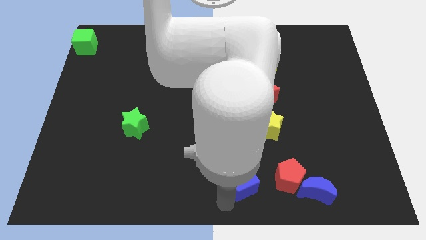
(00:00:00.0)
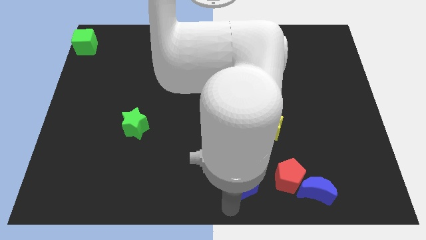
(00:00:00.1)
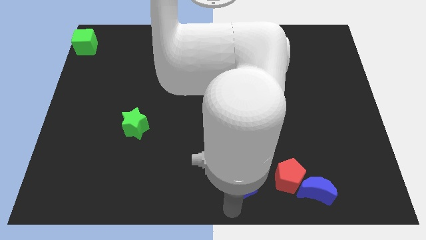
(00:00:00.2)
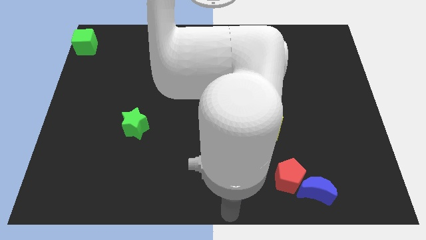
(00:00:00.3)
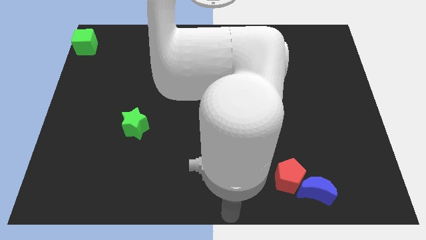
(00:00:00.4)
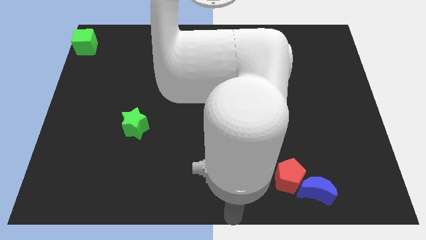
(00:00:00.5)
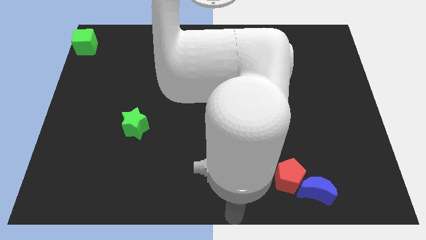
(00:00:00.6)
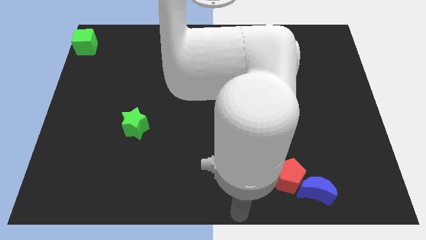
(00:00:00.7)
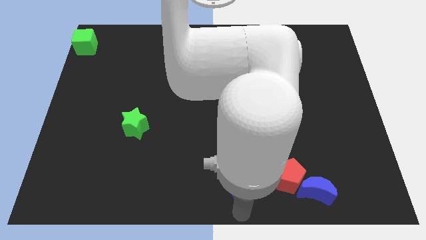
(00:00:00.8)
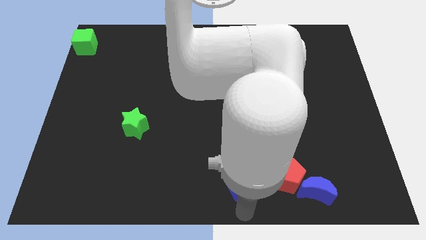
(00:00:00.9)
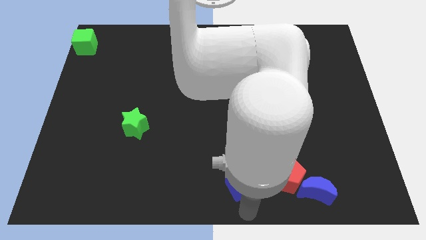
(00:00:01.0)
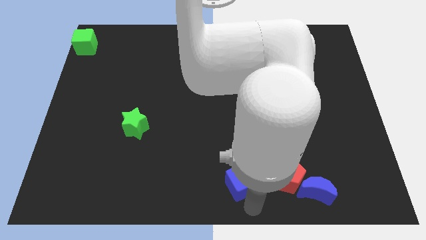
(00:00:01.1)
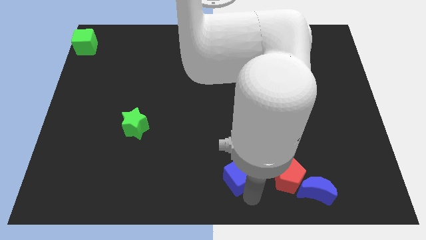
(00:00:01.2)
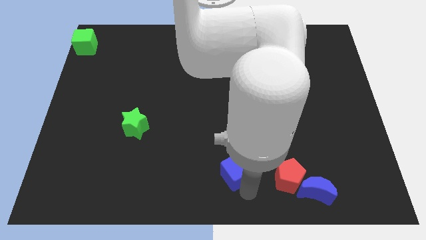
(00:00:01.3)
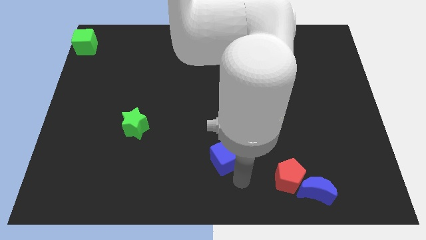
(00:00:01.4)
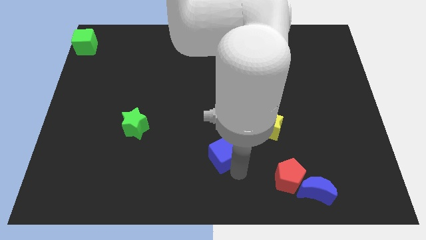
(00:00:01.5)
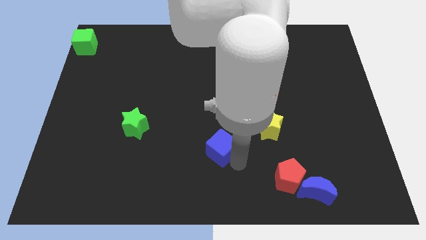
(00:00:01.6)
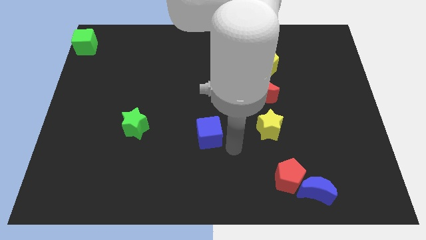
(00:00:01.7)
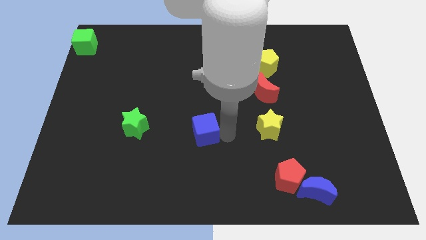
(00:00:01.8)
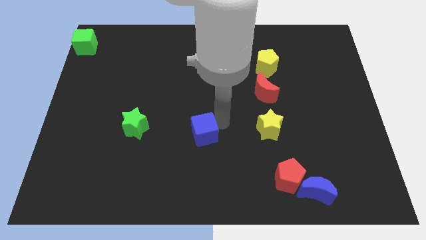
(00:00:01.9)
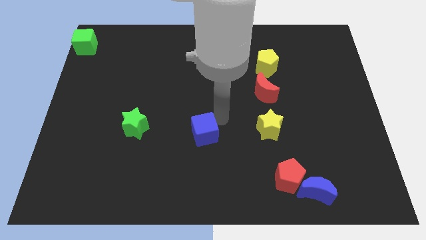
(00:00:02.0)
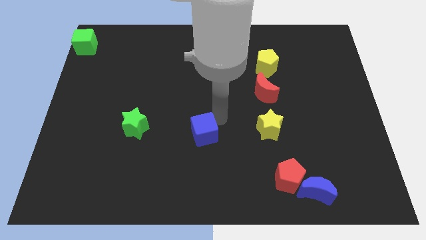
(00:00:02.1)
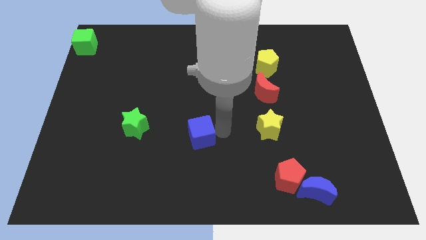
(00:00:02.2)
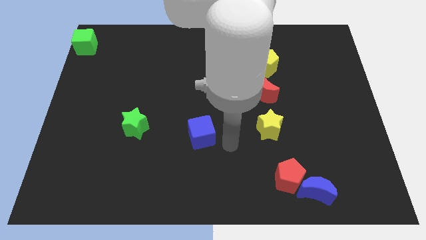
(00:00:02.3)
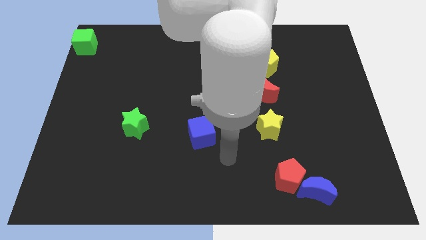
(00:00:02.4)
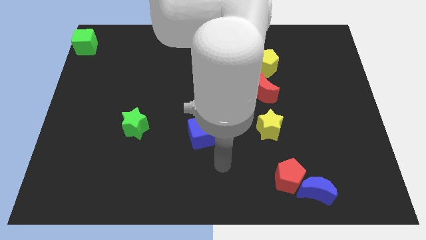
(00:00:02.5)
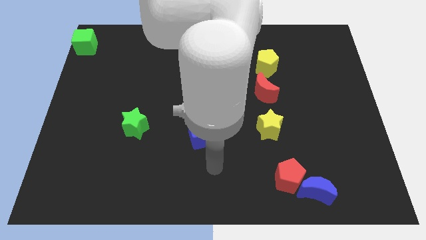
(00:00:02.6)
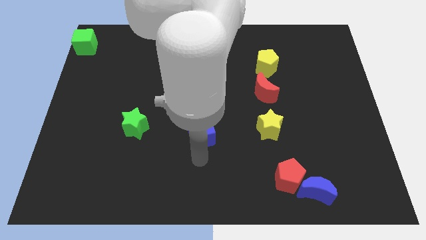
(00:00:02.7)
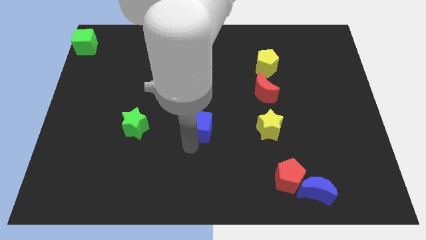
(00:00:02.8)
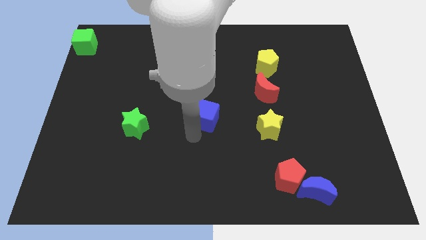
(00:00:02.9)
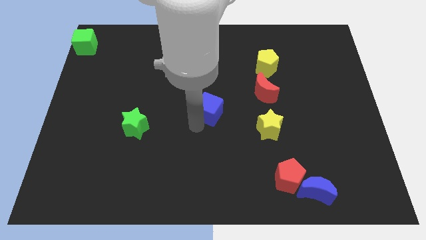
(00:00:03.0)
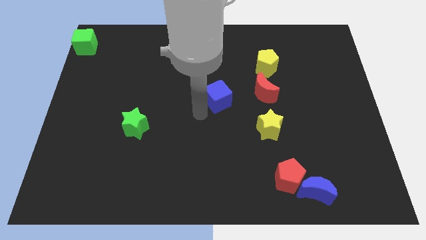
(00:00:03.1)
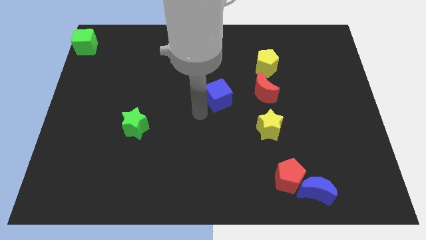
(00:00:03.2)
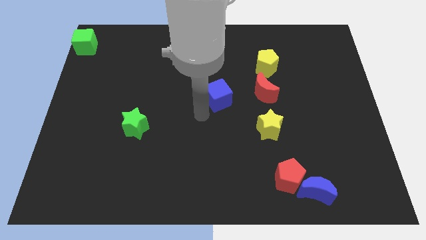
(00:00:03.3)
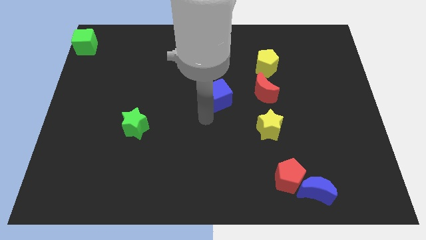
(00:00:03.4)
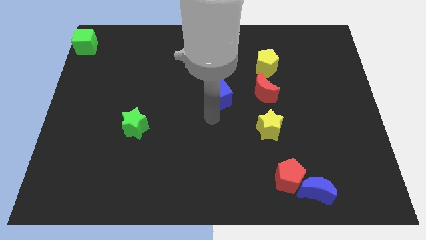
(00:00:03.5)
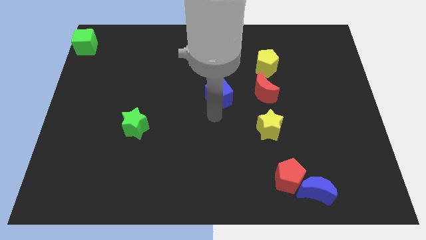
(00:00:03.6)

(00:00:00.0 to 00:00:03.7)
place the blue cube left to the red moon

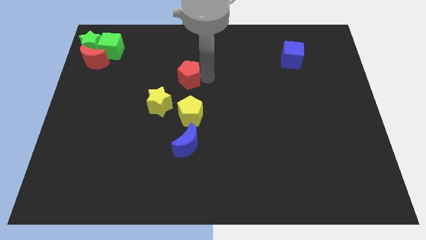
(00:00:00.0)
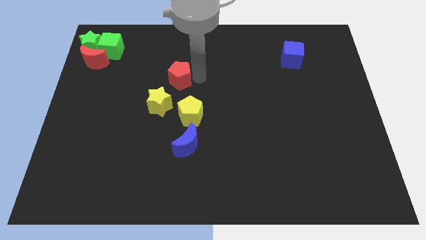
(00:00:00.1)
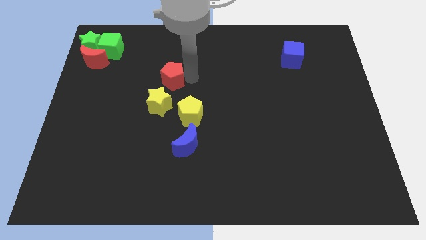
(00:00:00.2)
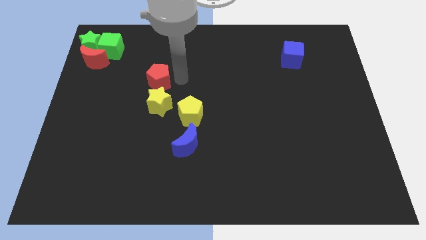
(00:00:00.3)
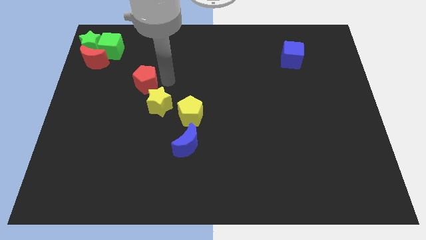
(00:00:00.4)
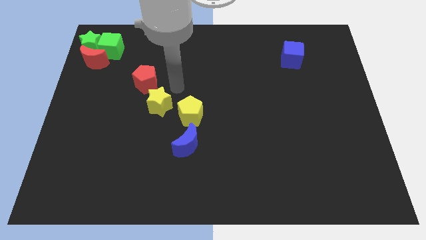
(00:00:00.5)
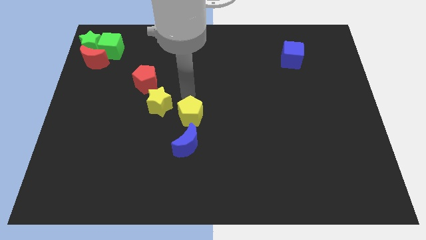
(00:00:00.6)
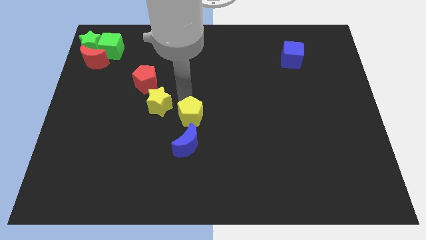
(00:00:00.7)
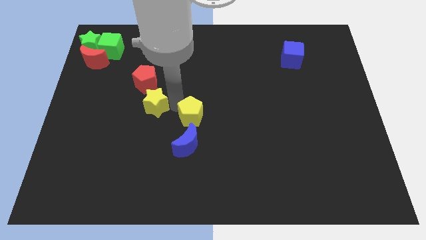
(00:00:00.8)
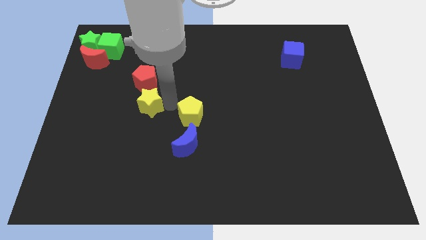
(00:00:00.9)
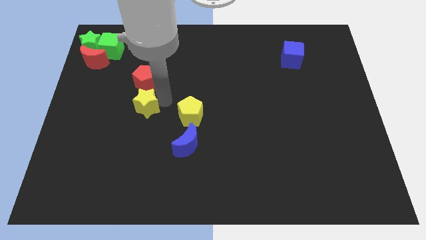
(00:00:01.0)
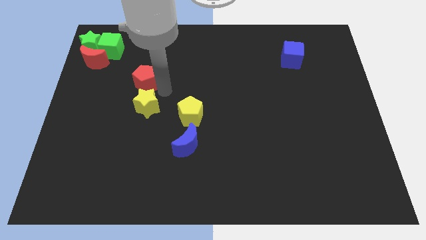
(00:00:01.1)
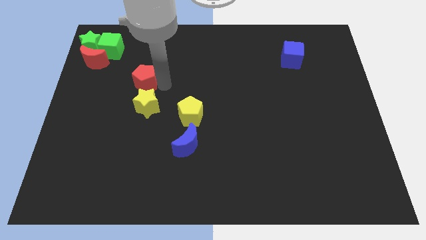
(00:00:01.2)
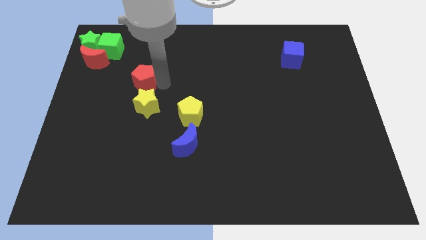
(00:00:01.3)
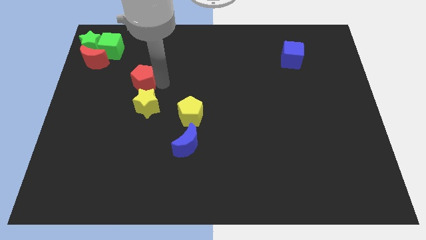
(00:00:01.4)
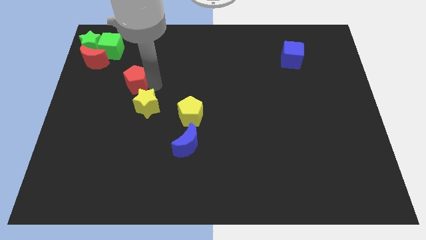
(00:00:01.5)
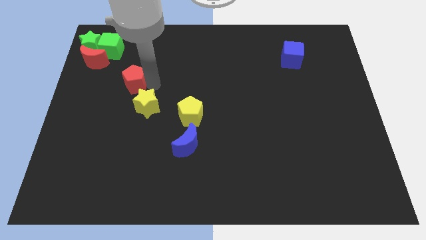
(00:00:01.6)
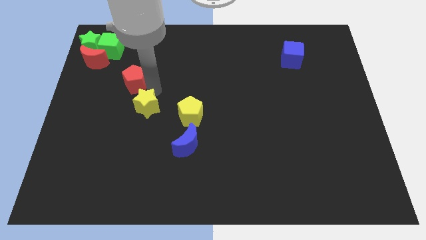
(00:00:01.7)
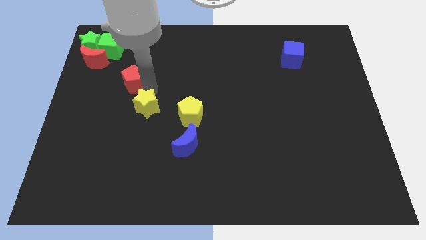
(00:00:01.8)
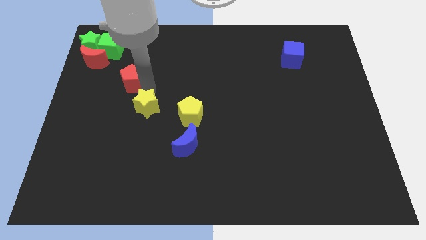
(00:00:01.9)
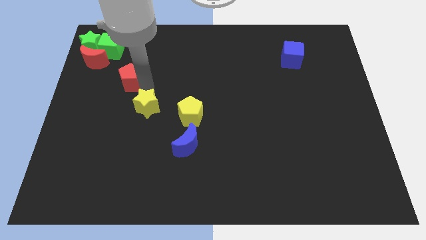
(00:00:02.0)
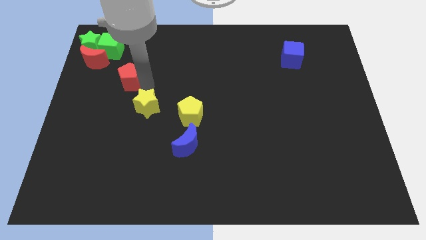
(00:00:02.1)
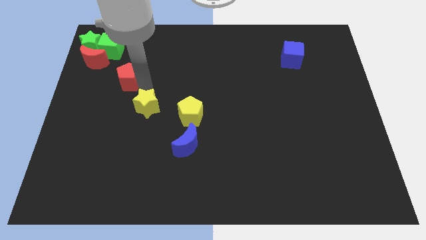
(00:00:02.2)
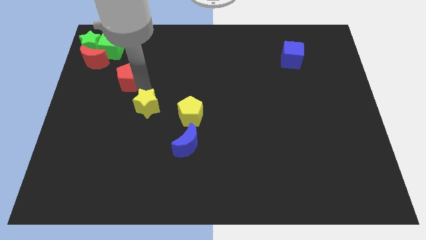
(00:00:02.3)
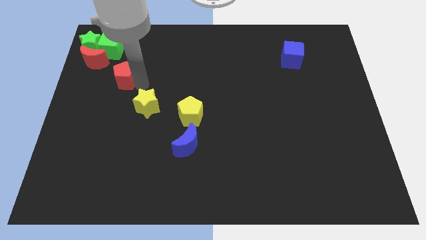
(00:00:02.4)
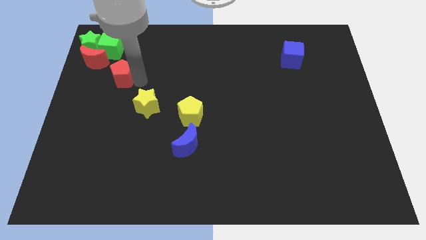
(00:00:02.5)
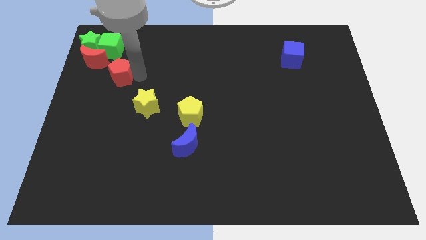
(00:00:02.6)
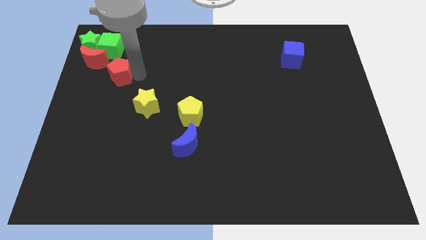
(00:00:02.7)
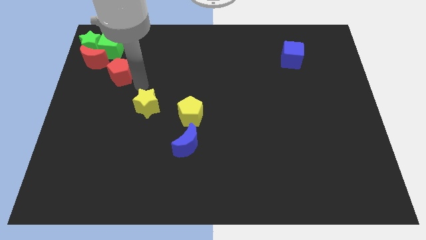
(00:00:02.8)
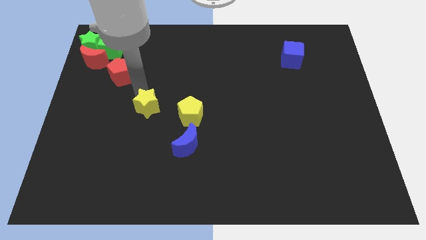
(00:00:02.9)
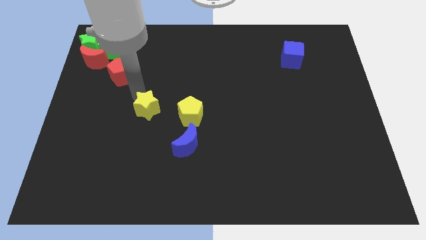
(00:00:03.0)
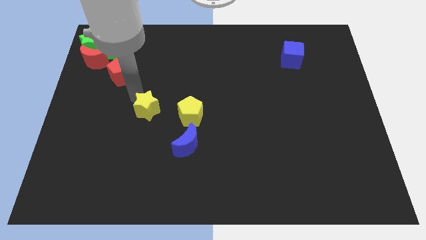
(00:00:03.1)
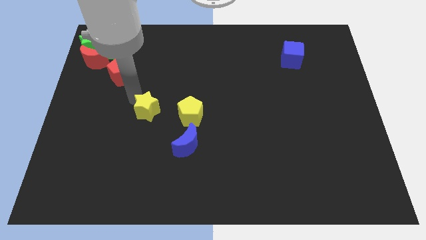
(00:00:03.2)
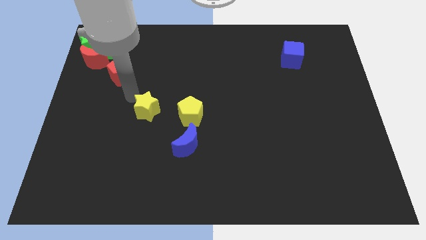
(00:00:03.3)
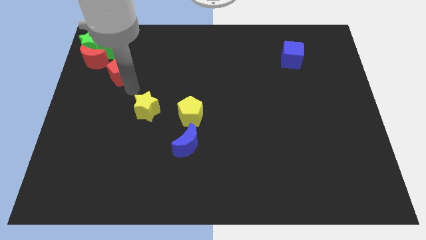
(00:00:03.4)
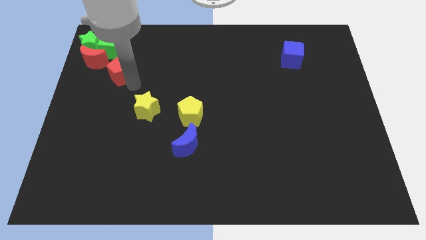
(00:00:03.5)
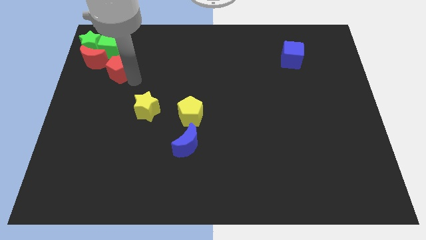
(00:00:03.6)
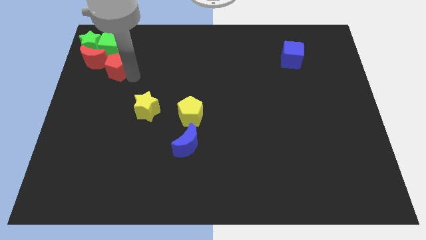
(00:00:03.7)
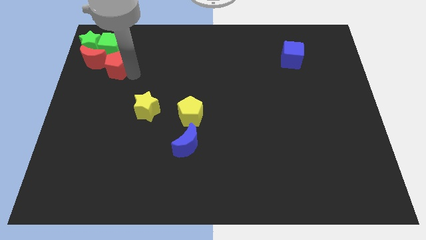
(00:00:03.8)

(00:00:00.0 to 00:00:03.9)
slide yellow star and the red pentagon diagonal to each other

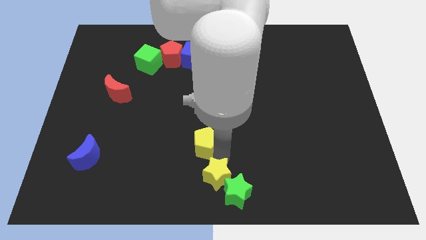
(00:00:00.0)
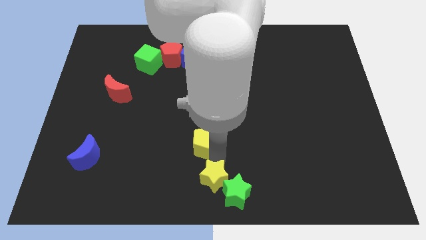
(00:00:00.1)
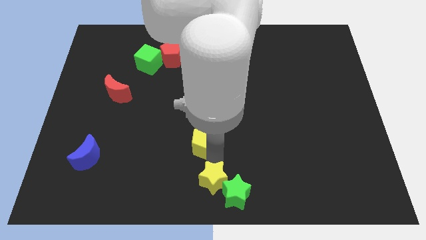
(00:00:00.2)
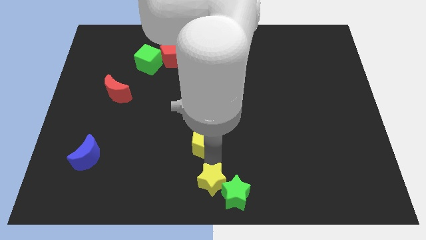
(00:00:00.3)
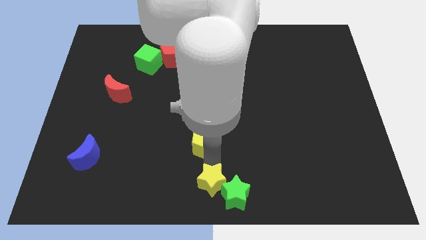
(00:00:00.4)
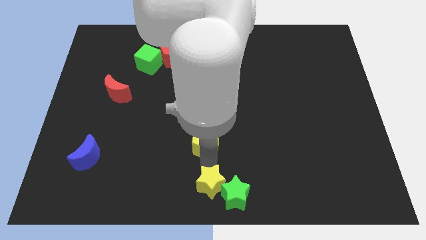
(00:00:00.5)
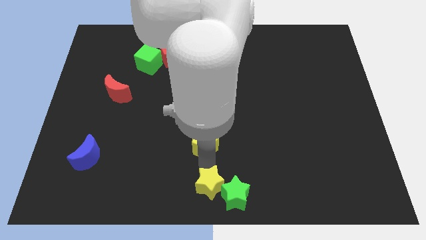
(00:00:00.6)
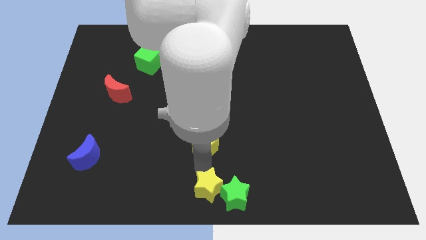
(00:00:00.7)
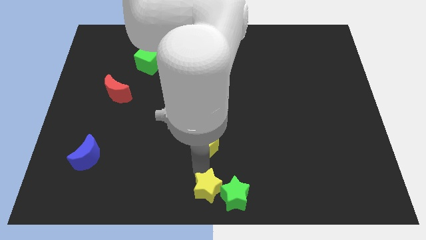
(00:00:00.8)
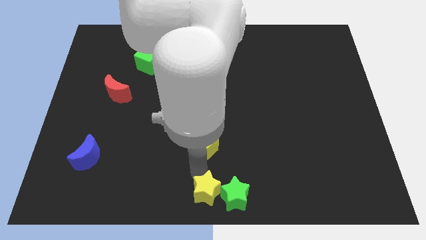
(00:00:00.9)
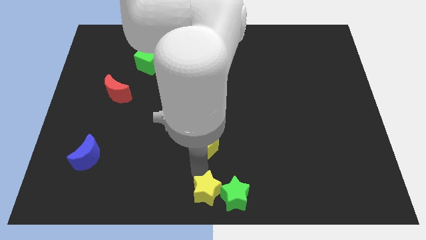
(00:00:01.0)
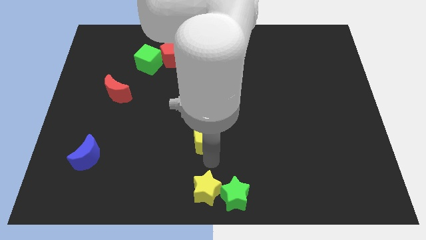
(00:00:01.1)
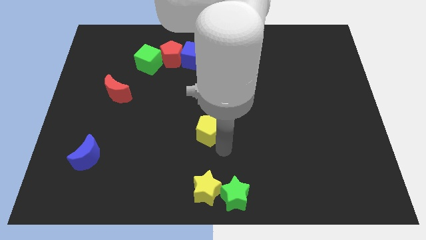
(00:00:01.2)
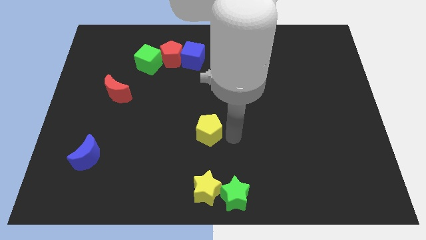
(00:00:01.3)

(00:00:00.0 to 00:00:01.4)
place the yellow star to the left of the green star
